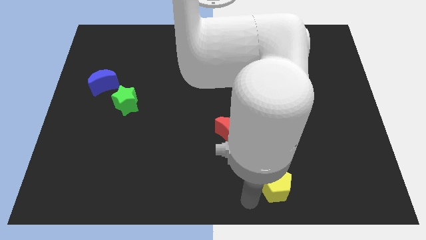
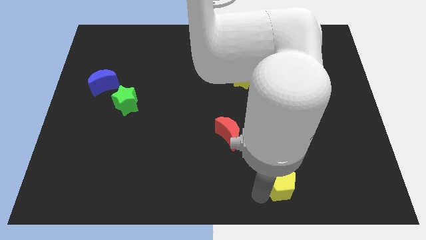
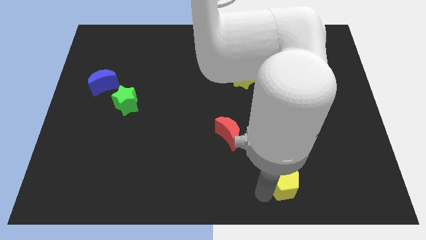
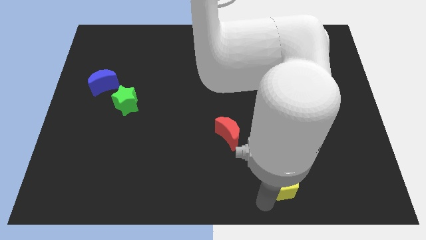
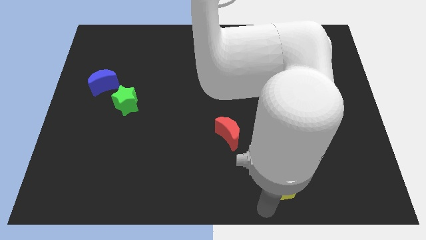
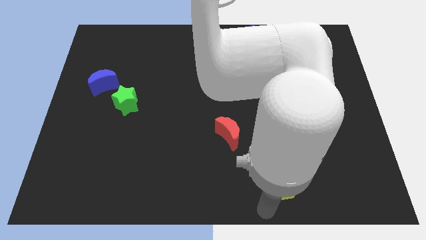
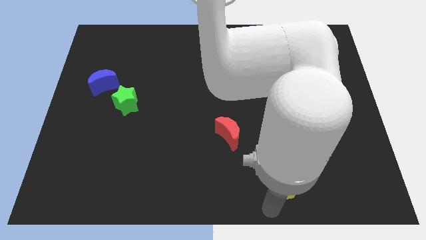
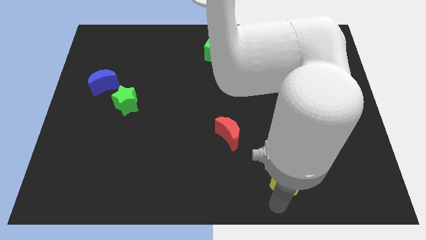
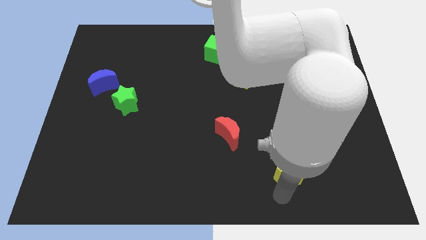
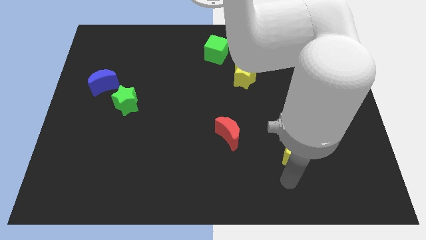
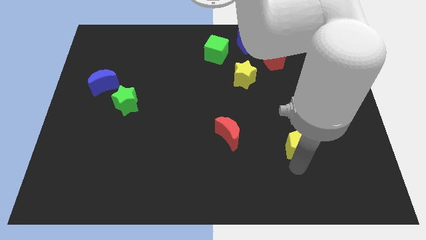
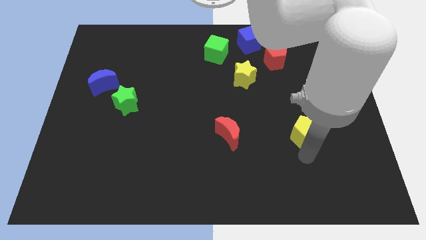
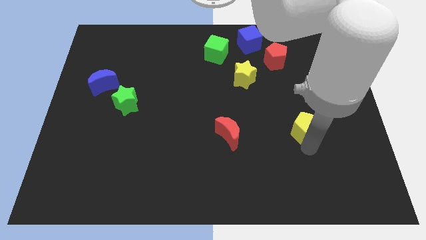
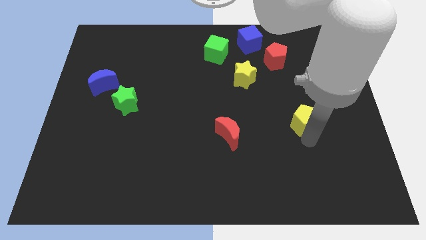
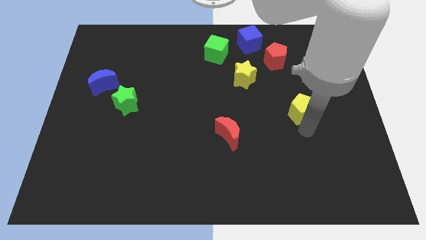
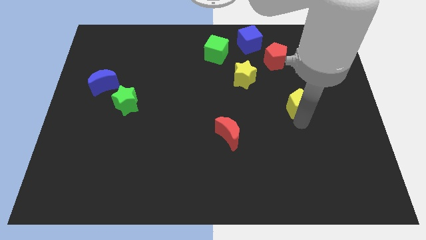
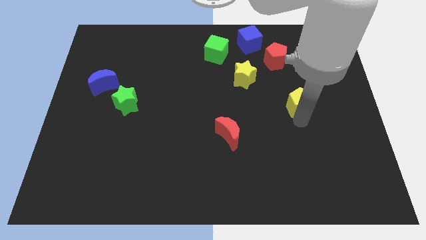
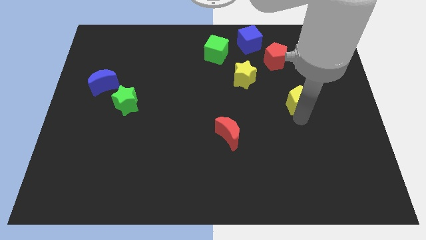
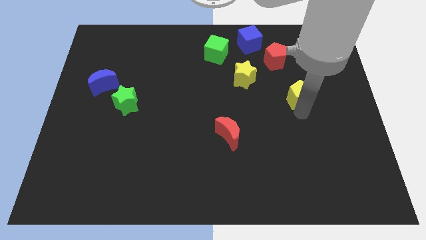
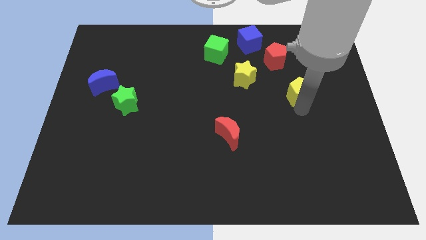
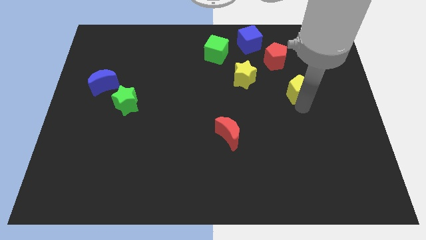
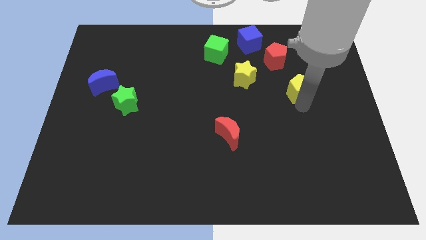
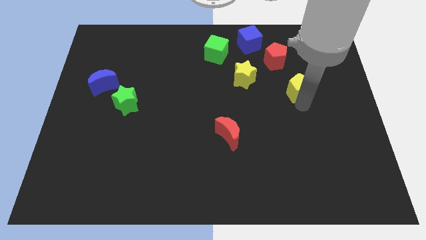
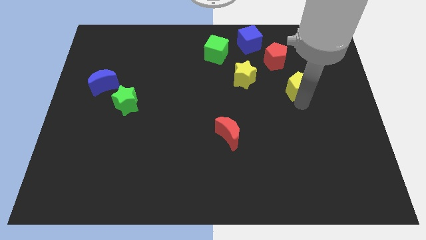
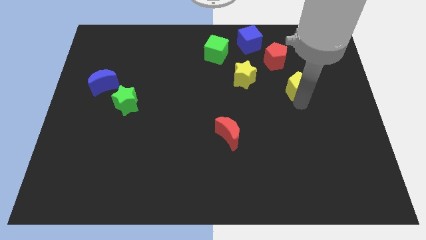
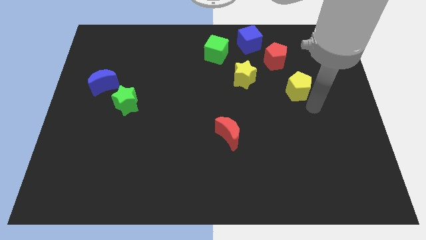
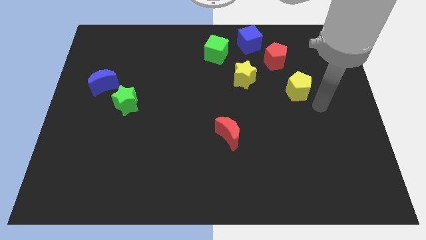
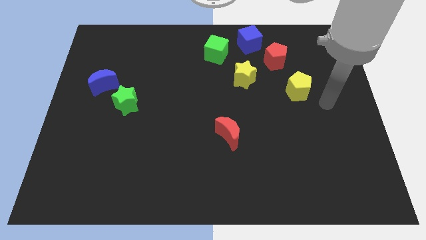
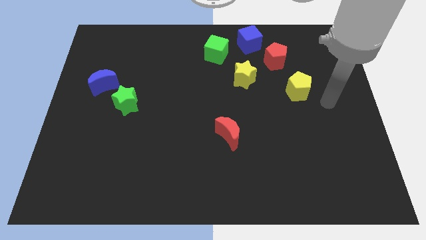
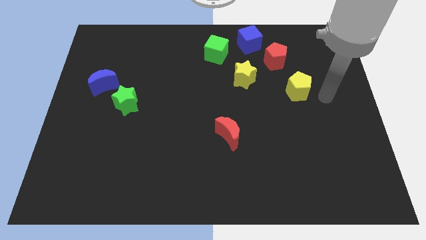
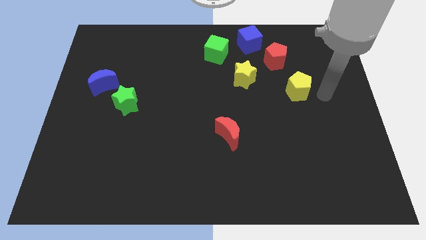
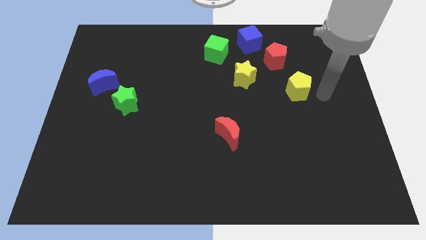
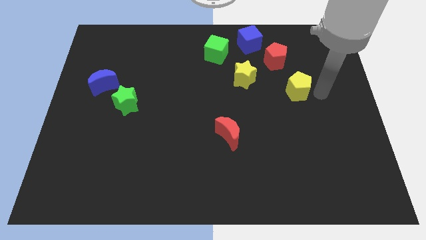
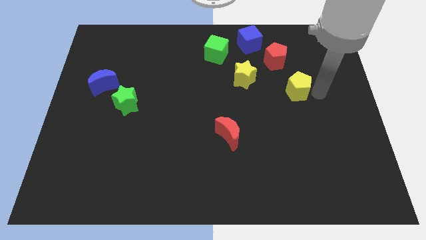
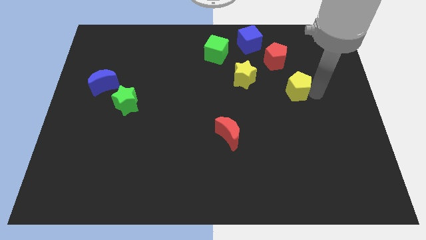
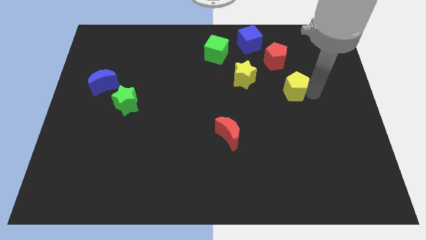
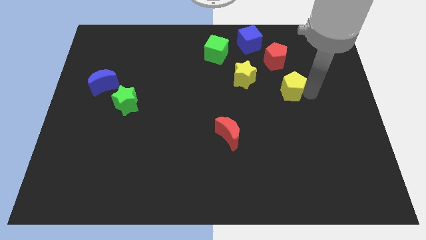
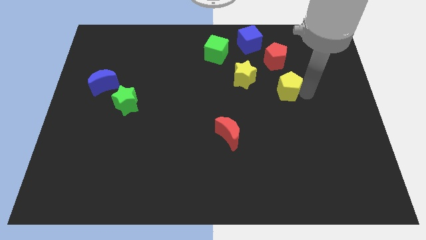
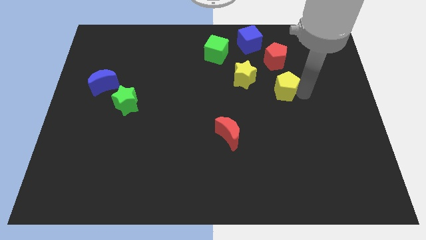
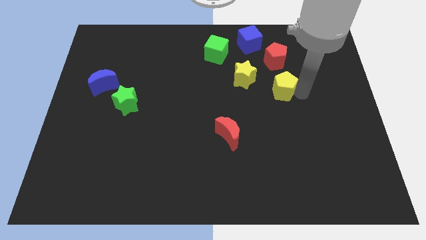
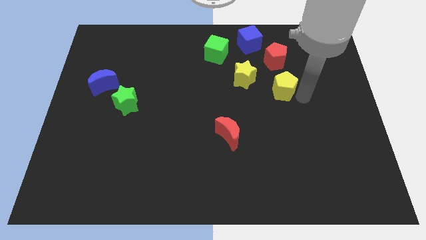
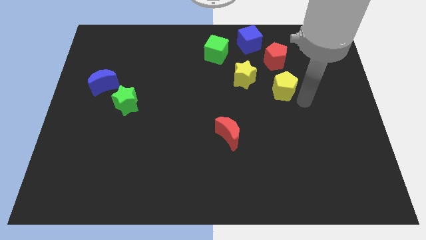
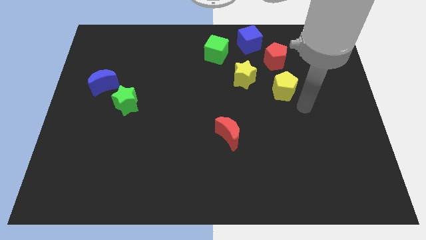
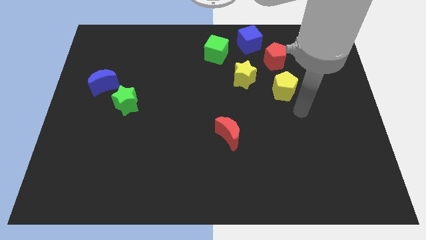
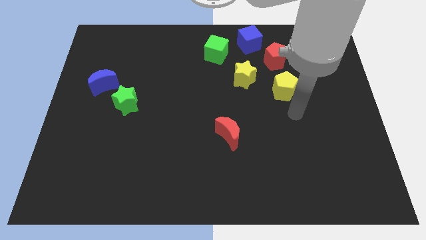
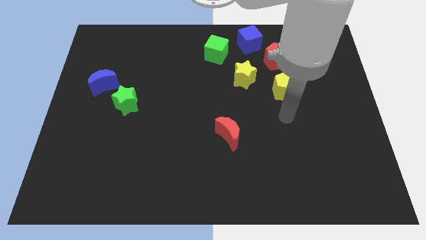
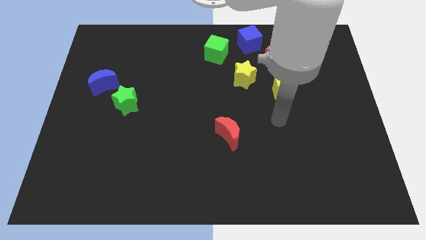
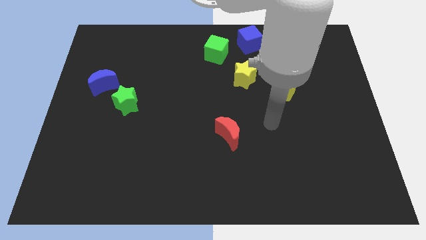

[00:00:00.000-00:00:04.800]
place the yellow pentagon below the red pentagon

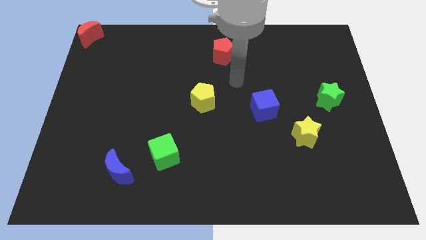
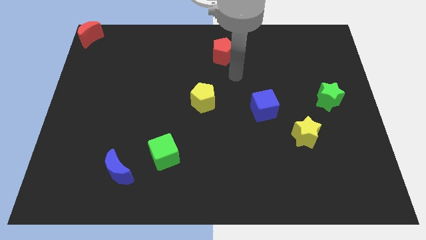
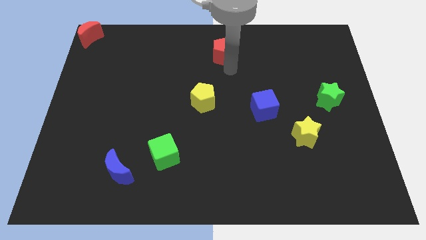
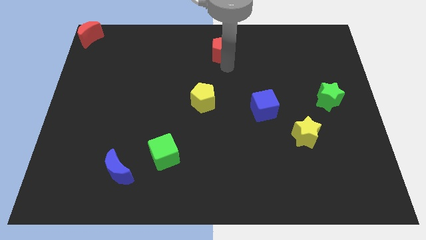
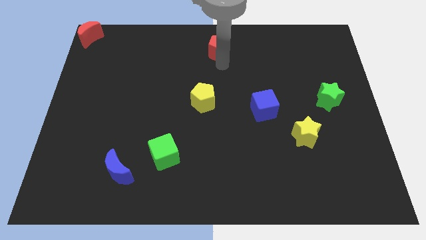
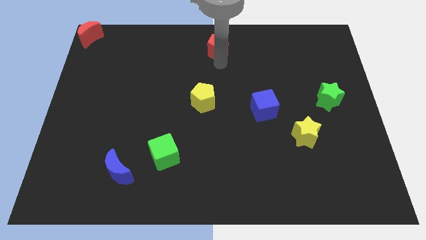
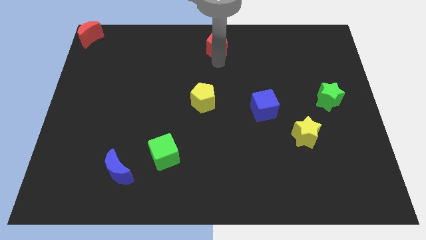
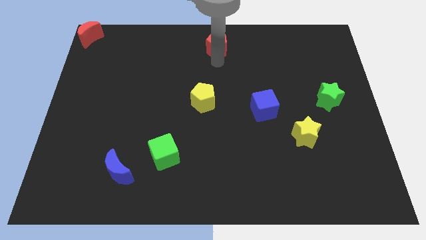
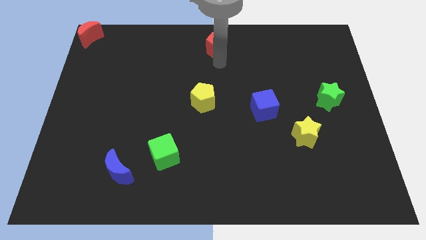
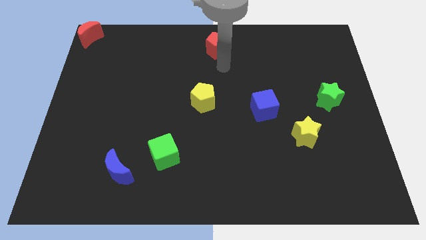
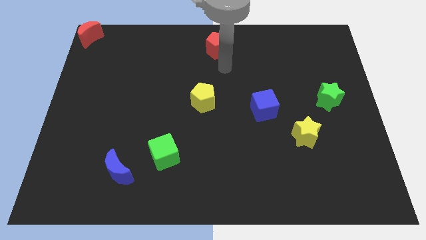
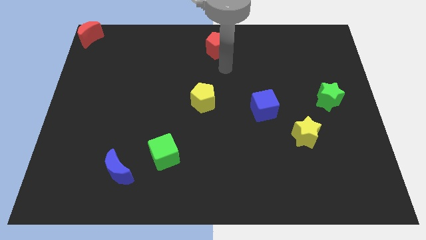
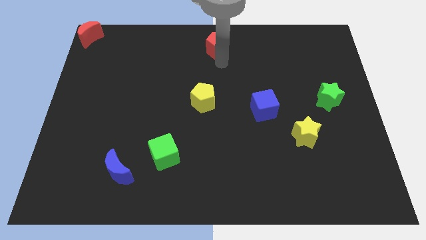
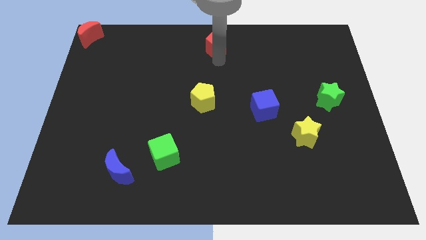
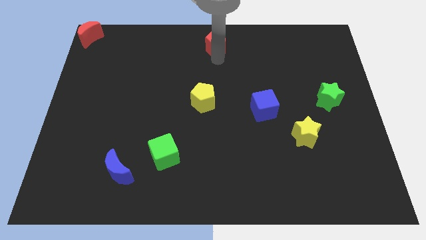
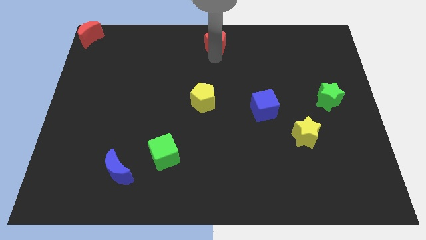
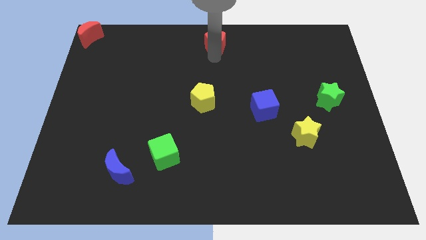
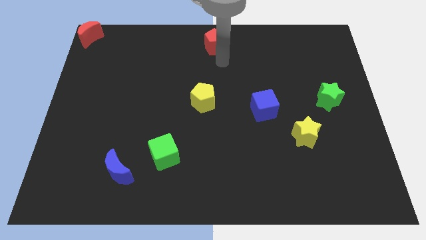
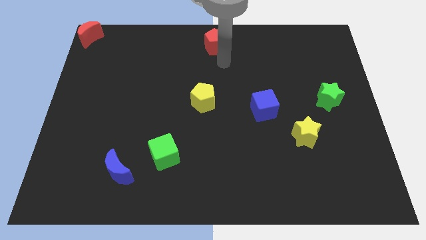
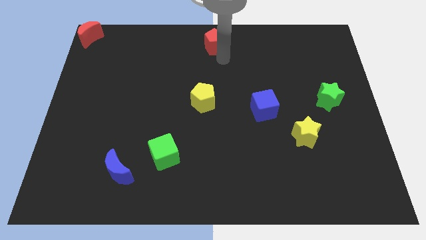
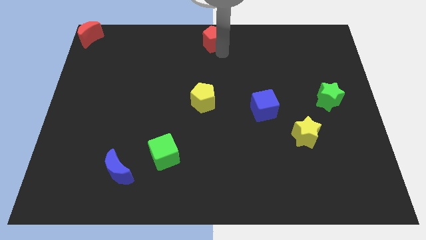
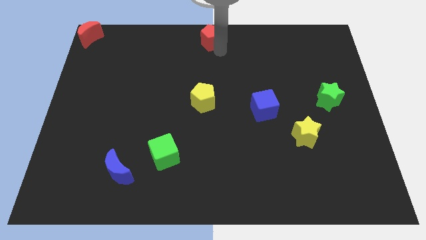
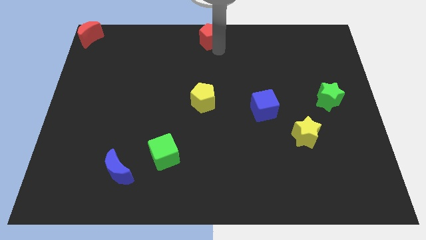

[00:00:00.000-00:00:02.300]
place the red pentagon right to the red moon

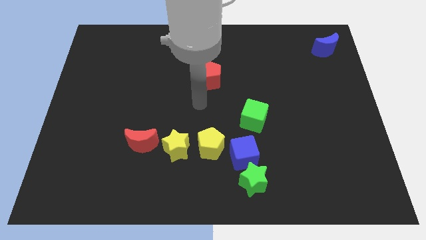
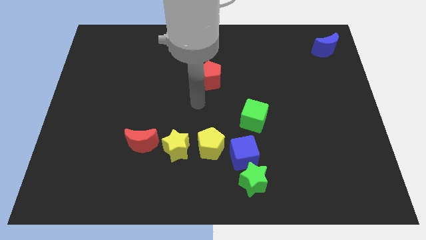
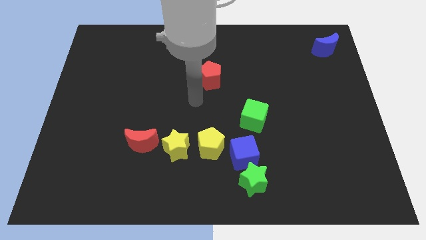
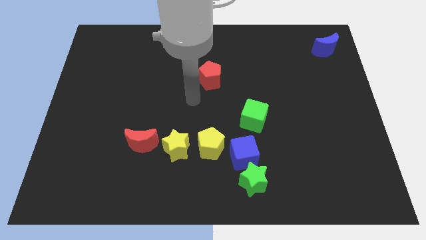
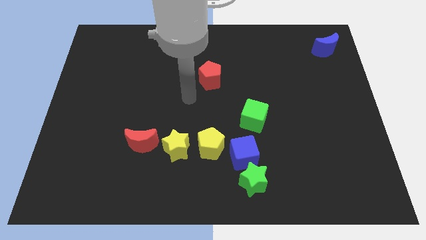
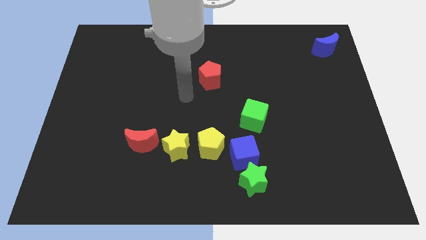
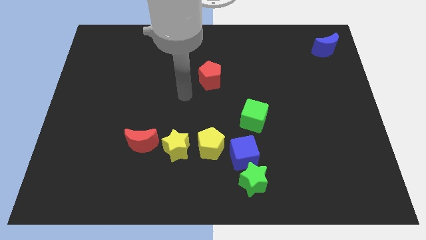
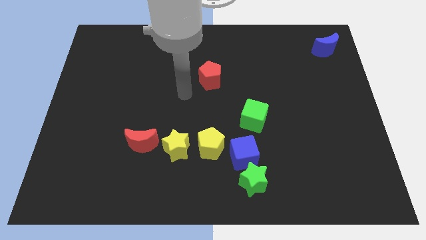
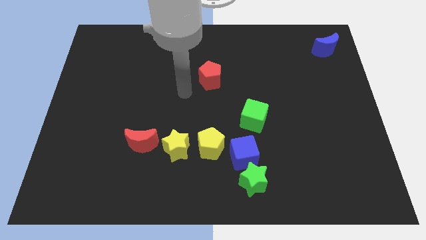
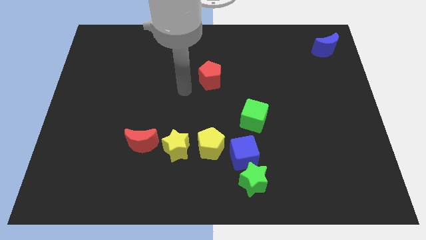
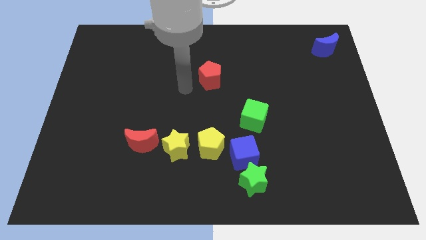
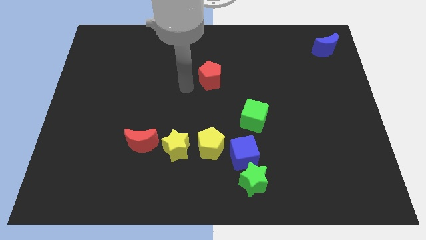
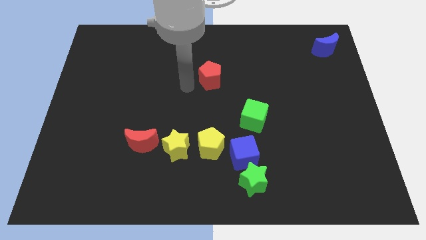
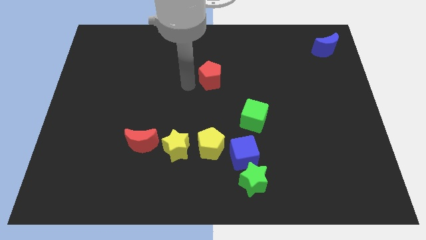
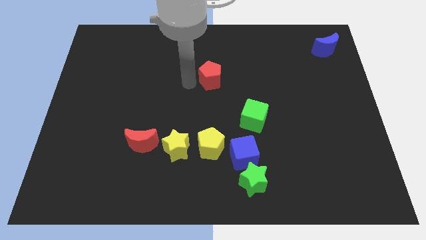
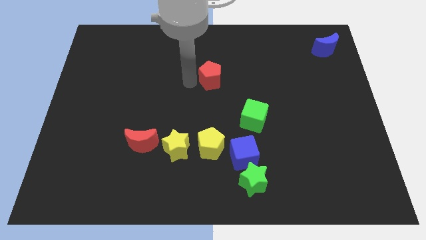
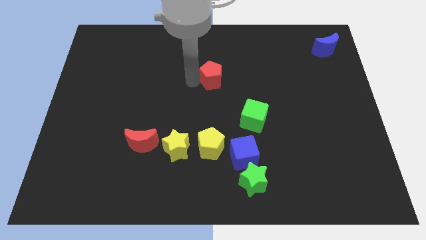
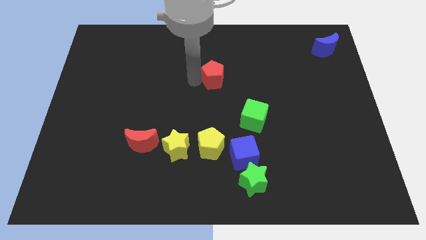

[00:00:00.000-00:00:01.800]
touch the left side of red pentagon

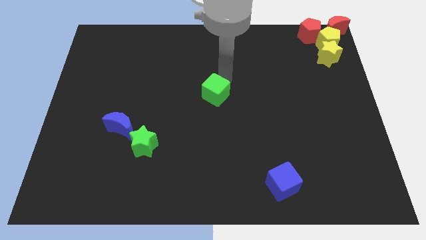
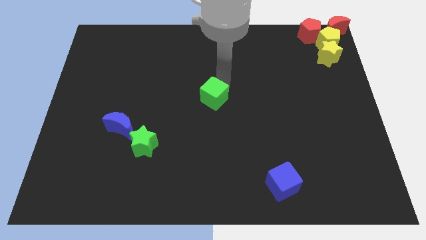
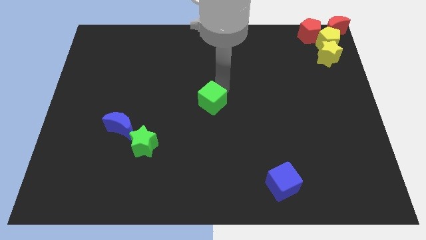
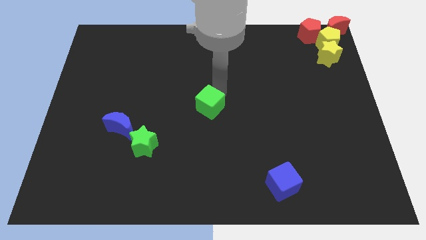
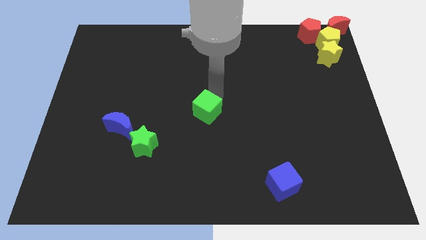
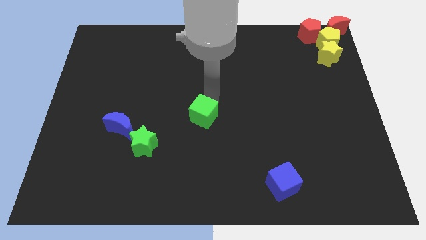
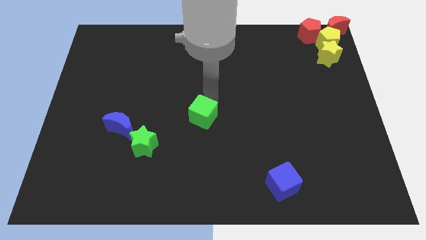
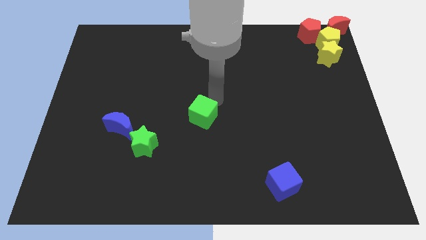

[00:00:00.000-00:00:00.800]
move the green cube to the center of the board
